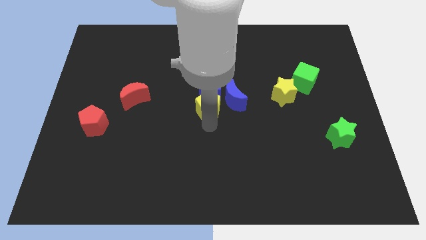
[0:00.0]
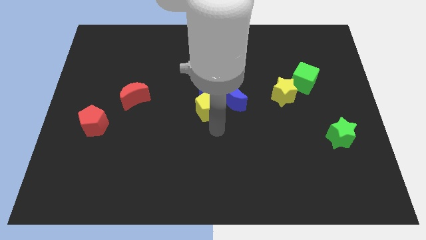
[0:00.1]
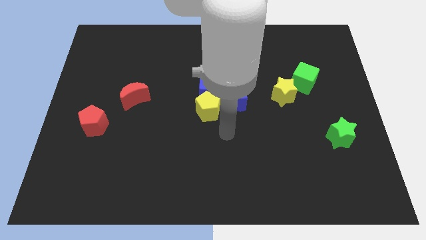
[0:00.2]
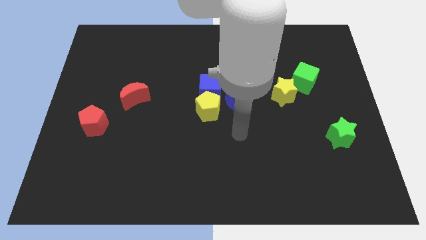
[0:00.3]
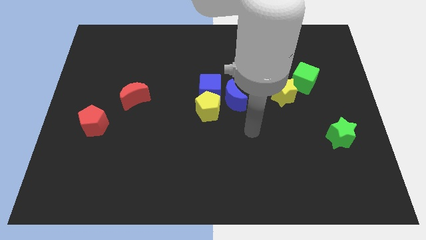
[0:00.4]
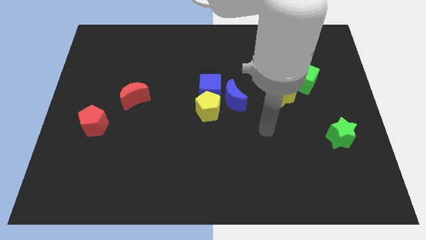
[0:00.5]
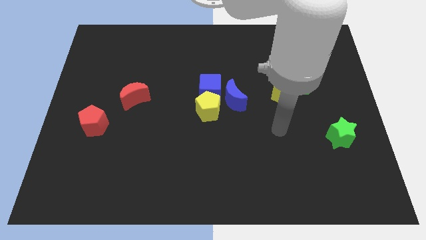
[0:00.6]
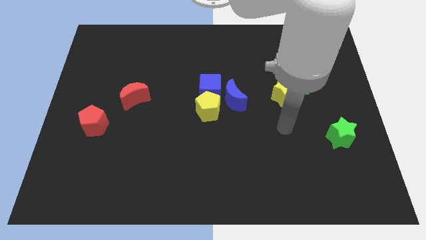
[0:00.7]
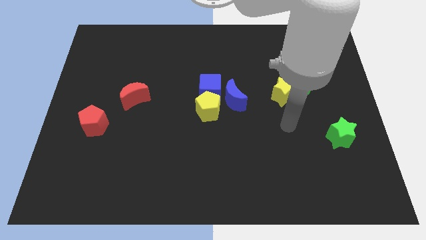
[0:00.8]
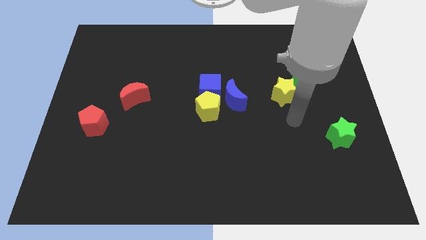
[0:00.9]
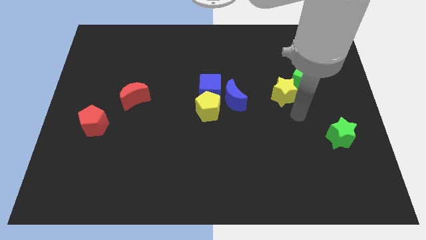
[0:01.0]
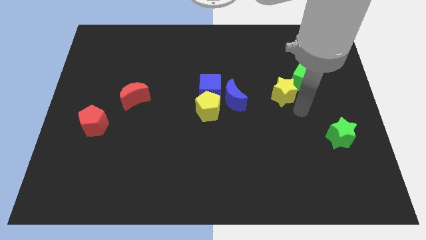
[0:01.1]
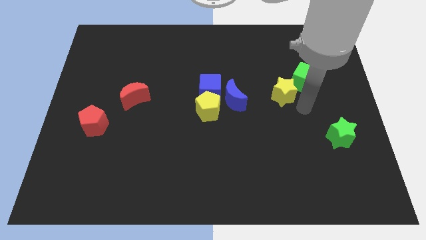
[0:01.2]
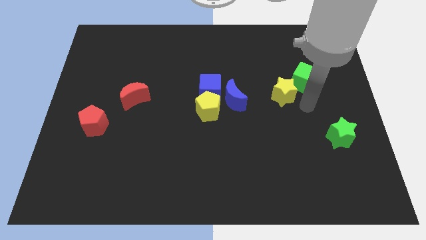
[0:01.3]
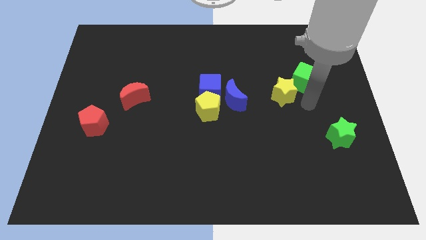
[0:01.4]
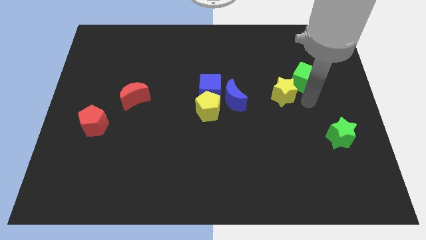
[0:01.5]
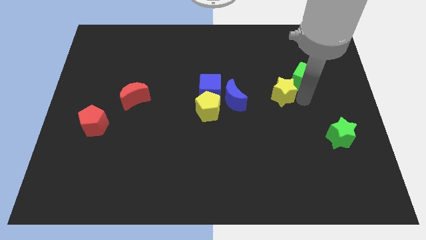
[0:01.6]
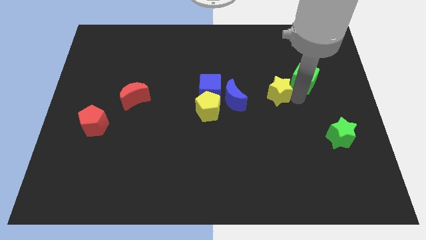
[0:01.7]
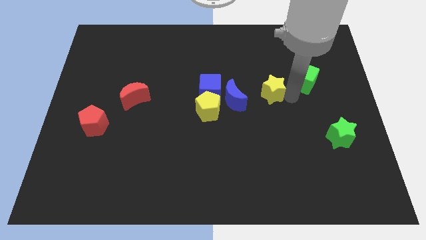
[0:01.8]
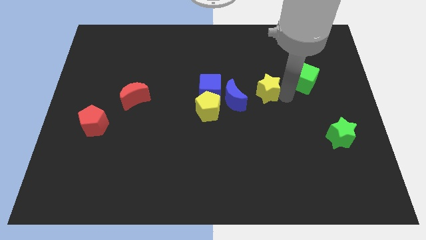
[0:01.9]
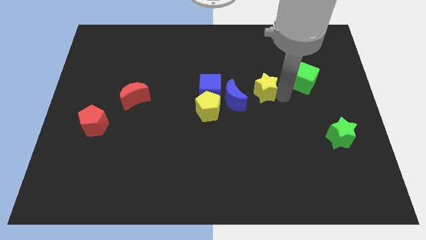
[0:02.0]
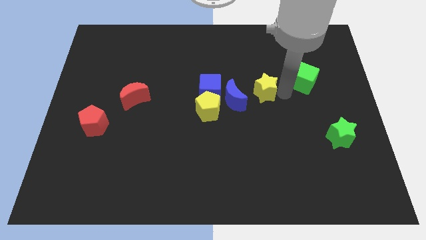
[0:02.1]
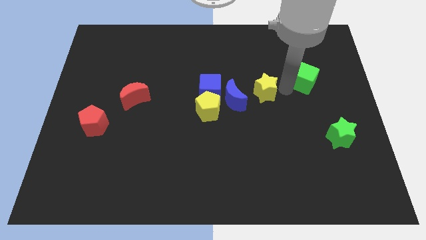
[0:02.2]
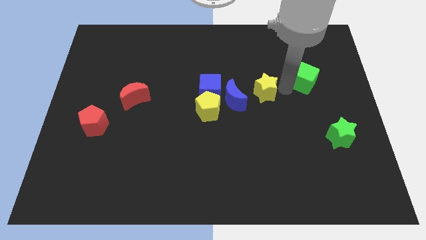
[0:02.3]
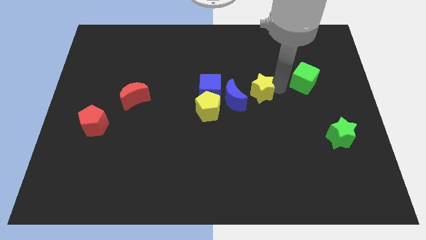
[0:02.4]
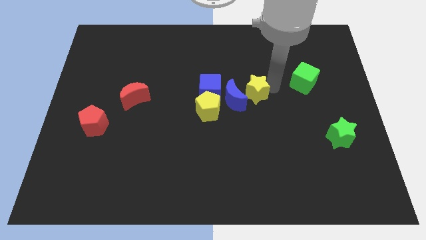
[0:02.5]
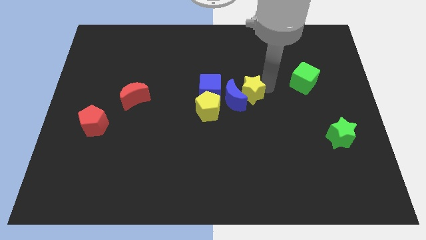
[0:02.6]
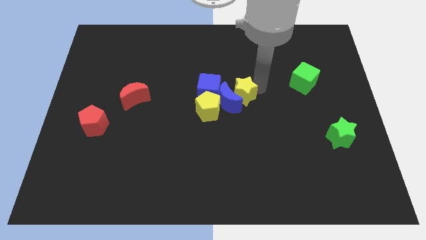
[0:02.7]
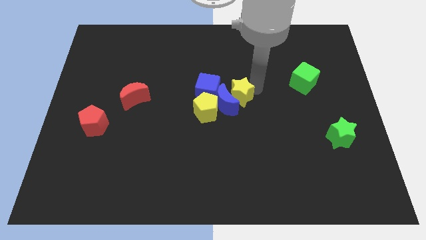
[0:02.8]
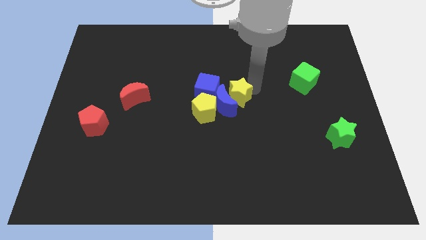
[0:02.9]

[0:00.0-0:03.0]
move the yellow star into the blue blocks

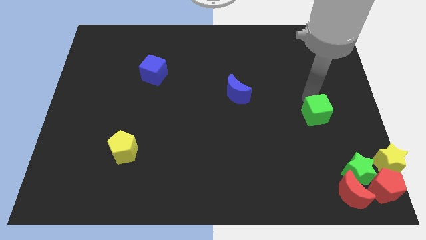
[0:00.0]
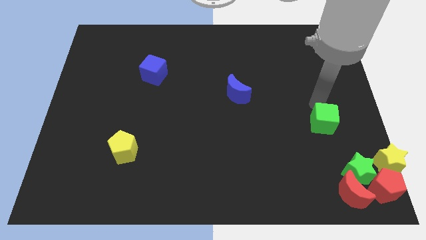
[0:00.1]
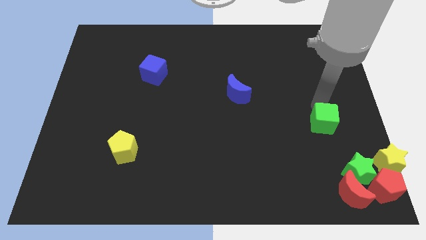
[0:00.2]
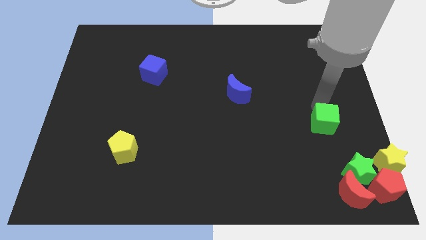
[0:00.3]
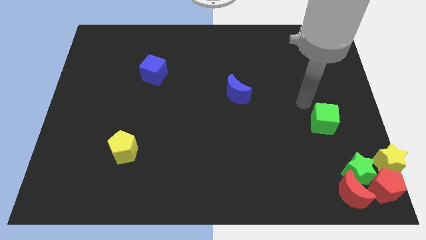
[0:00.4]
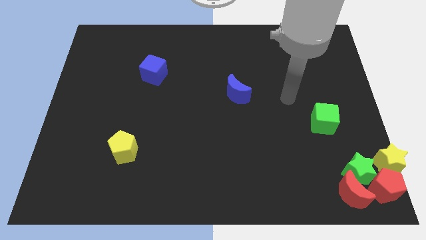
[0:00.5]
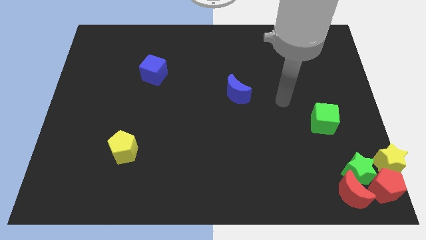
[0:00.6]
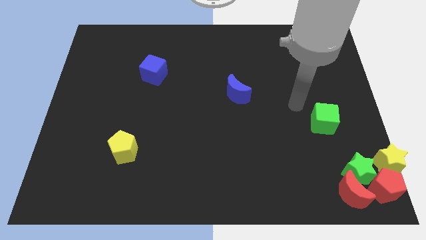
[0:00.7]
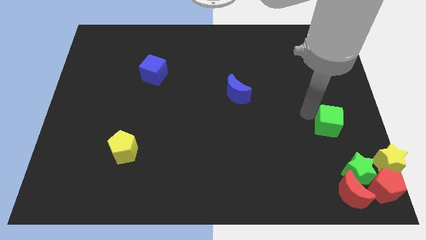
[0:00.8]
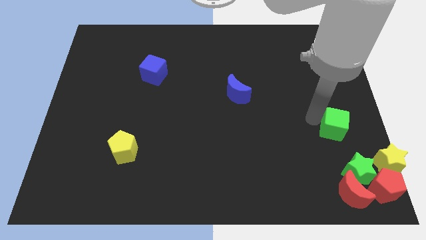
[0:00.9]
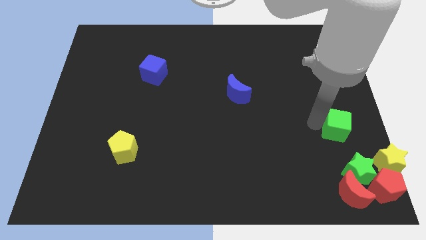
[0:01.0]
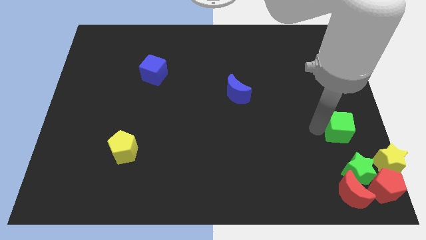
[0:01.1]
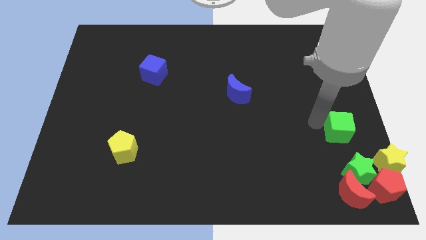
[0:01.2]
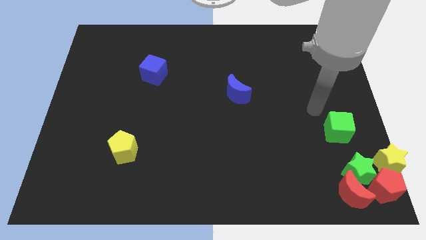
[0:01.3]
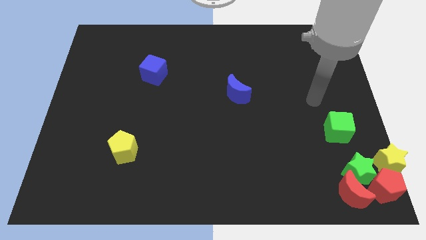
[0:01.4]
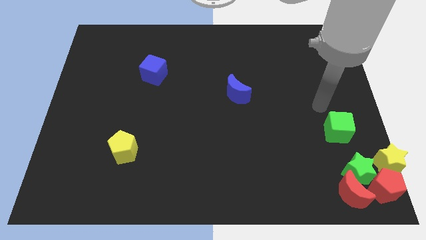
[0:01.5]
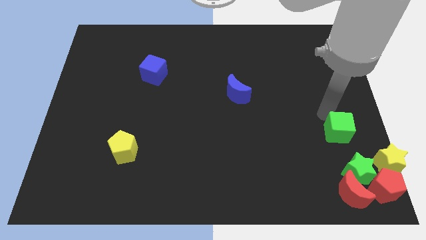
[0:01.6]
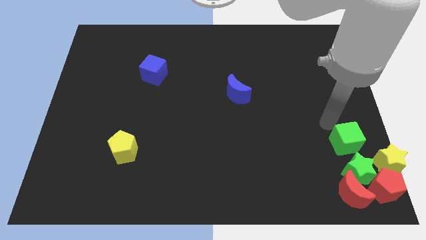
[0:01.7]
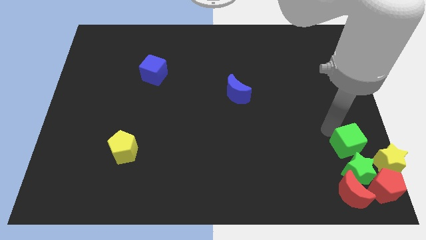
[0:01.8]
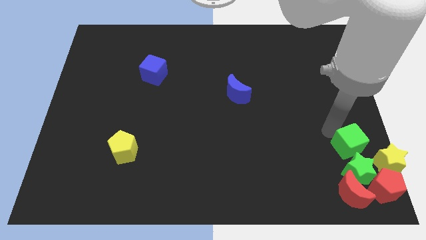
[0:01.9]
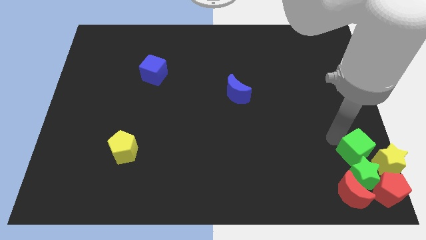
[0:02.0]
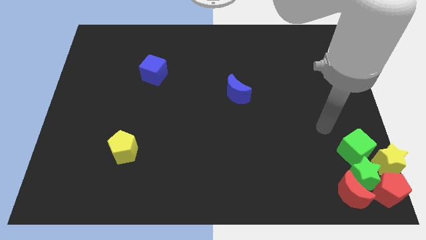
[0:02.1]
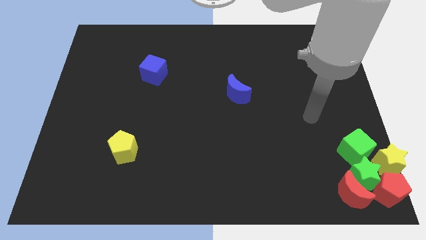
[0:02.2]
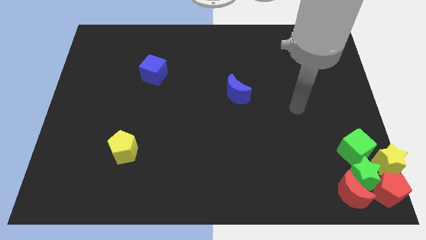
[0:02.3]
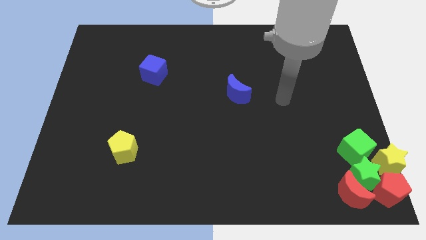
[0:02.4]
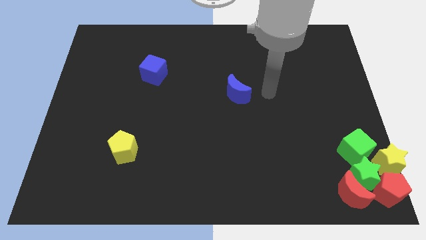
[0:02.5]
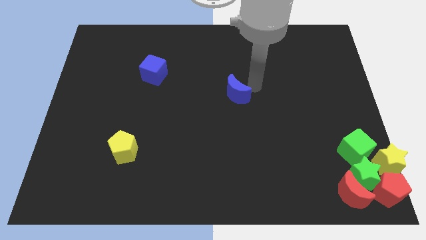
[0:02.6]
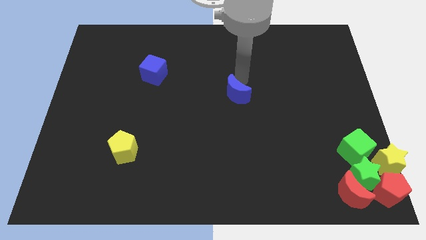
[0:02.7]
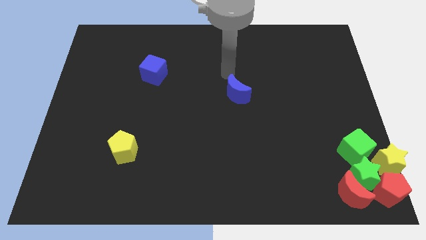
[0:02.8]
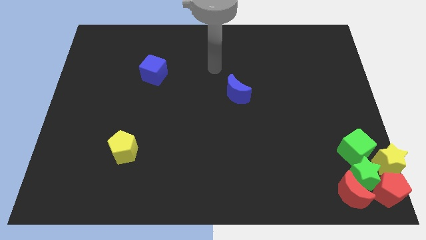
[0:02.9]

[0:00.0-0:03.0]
push the green cube into green star

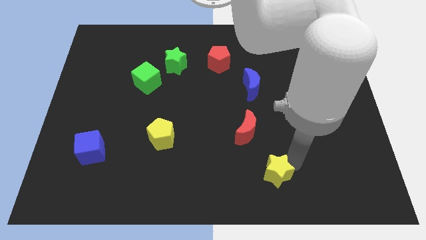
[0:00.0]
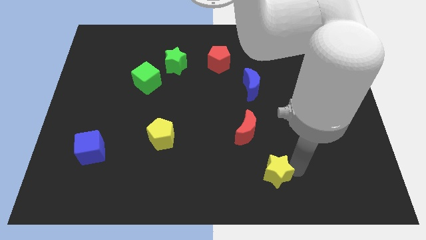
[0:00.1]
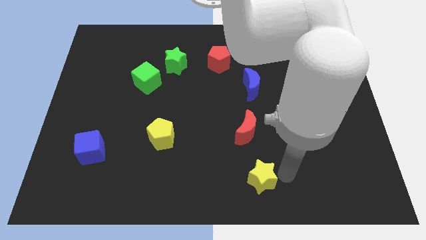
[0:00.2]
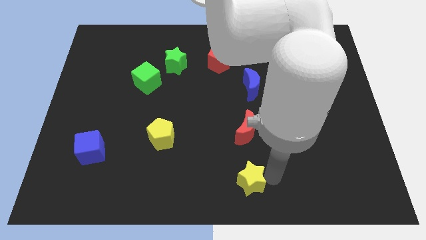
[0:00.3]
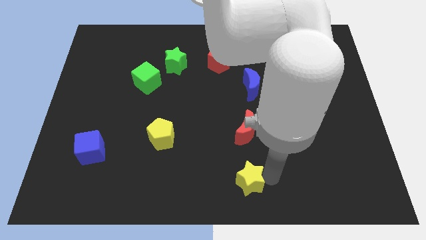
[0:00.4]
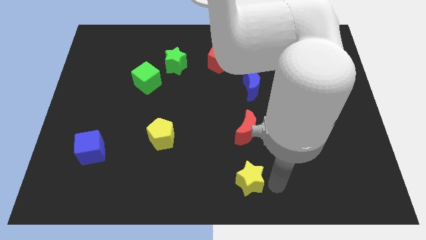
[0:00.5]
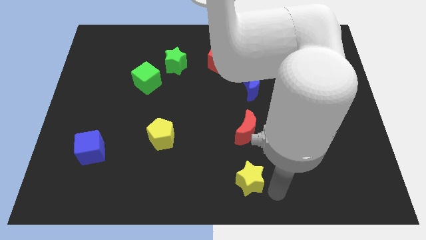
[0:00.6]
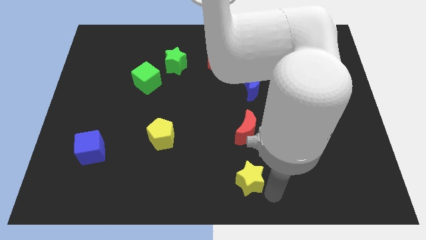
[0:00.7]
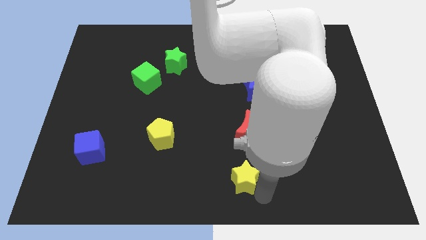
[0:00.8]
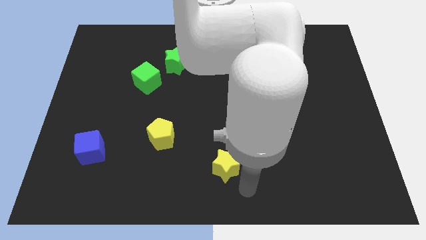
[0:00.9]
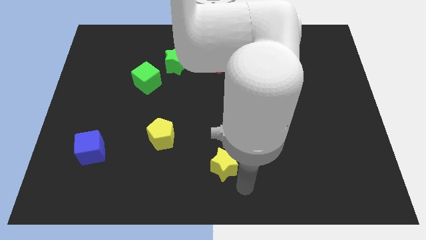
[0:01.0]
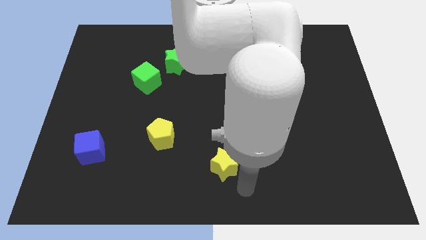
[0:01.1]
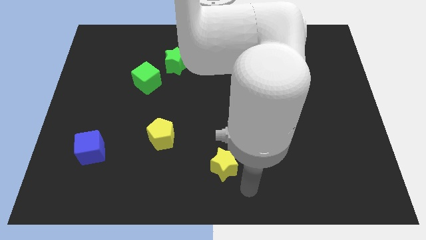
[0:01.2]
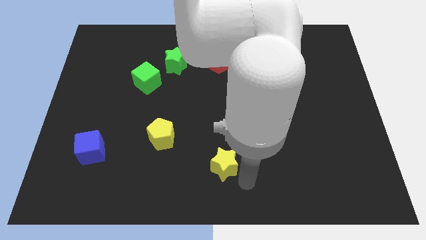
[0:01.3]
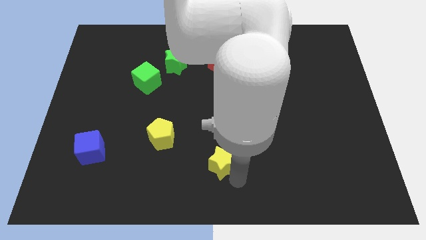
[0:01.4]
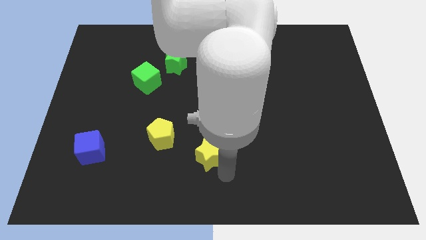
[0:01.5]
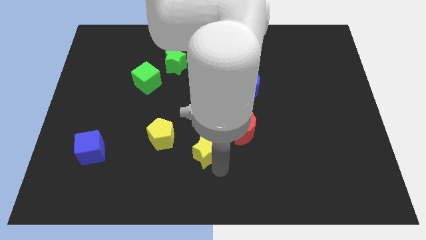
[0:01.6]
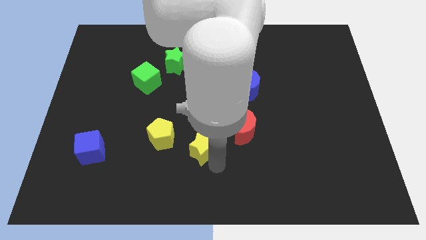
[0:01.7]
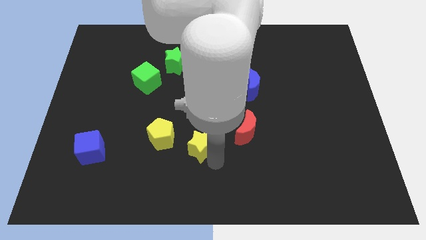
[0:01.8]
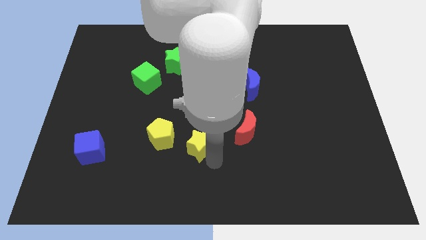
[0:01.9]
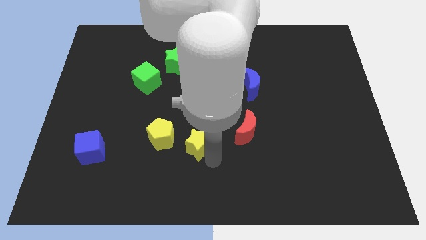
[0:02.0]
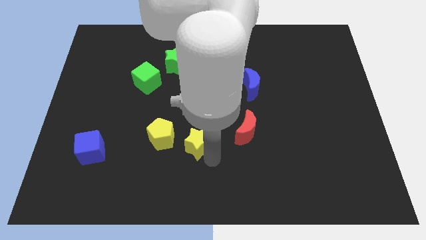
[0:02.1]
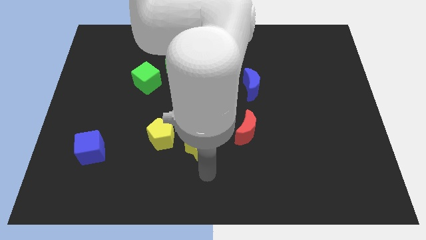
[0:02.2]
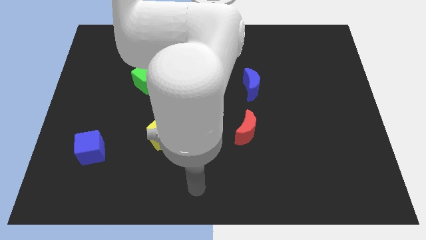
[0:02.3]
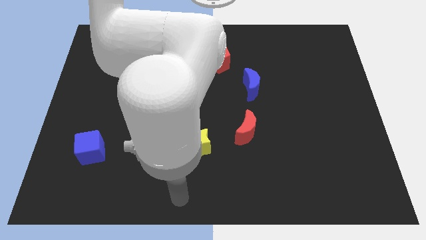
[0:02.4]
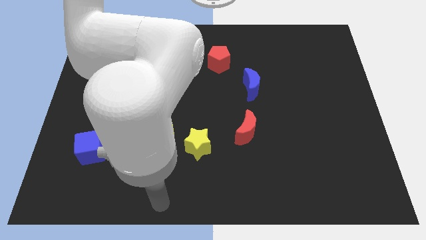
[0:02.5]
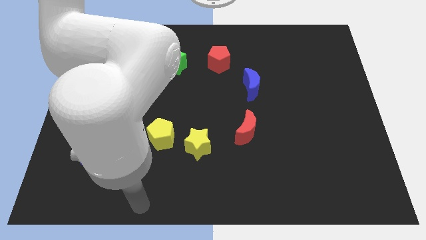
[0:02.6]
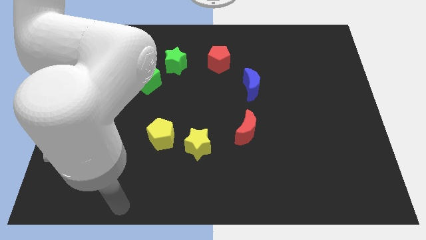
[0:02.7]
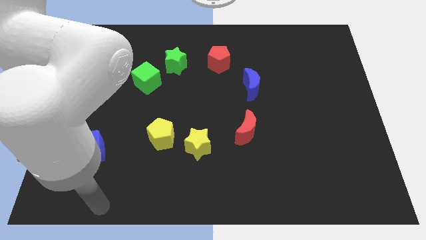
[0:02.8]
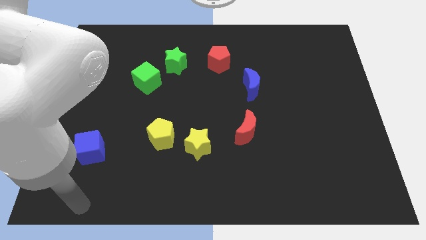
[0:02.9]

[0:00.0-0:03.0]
place yellow star on right to yellow pentagon
